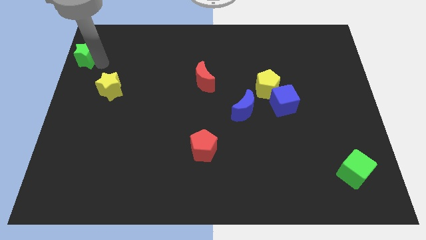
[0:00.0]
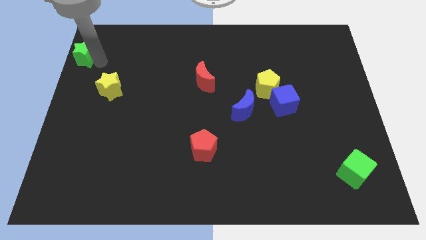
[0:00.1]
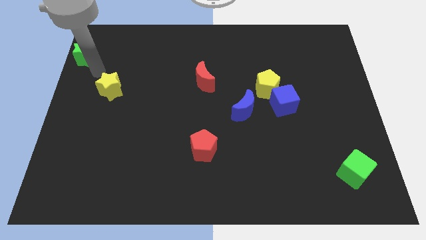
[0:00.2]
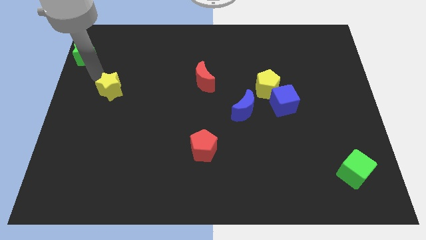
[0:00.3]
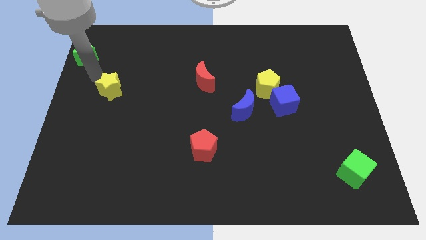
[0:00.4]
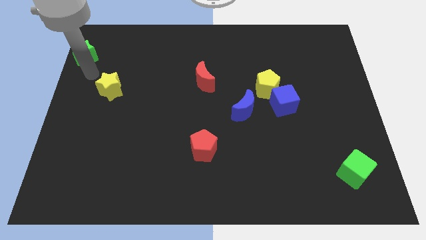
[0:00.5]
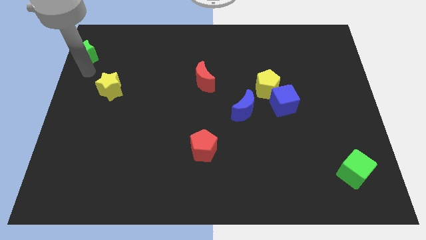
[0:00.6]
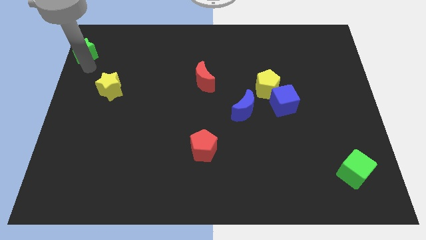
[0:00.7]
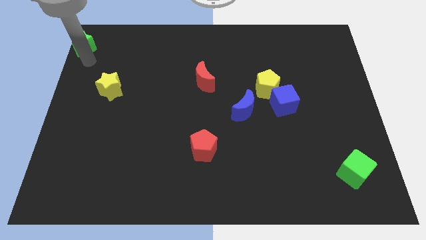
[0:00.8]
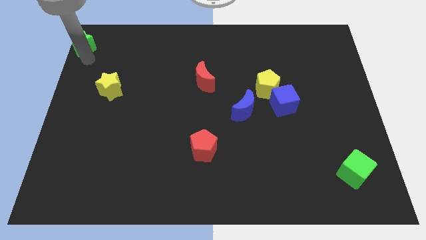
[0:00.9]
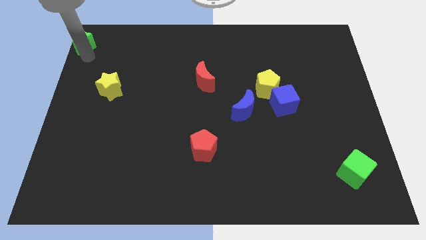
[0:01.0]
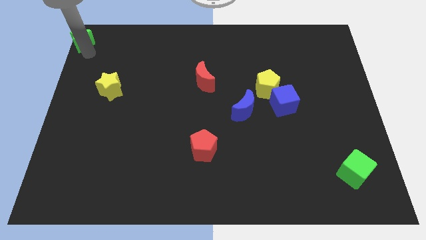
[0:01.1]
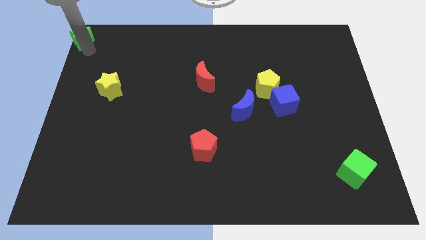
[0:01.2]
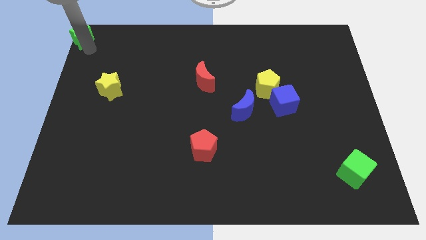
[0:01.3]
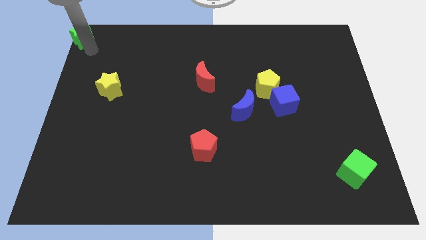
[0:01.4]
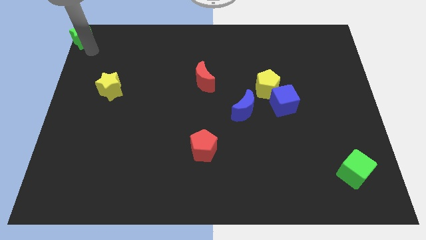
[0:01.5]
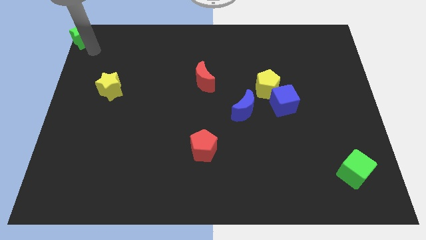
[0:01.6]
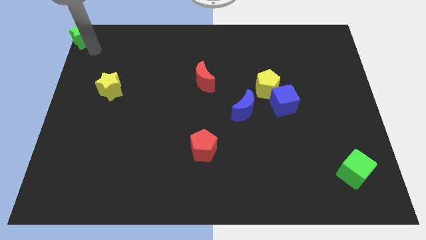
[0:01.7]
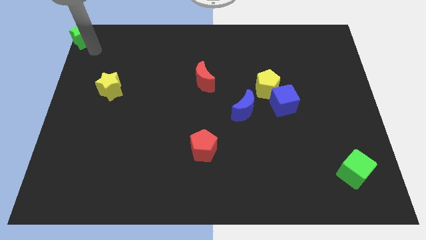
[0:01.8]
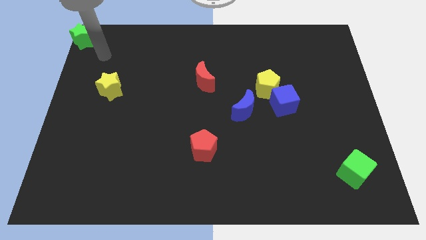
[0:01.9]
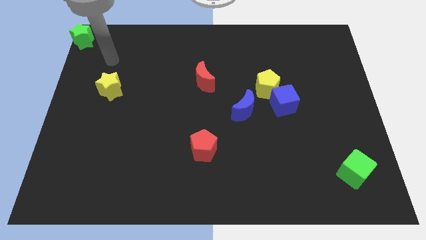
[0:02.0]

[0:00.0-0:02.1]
slide green star to the top left corner

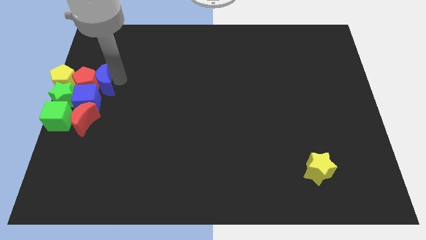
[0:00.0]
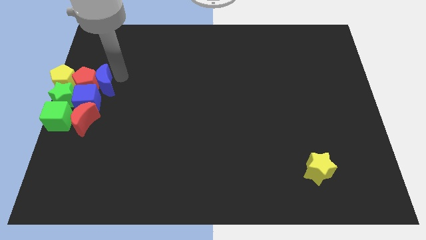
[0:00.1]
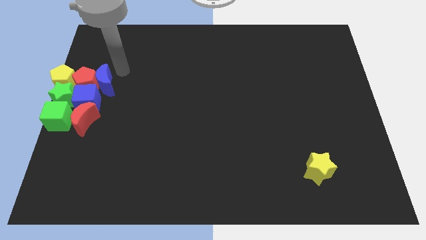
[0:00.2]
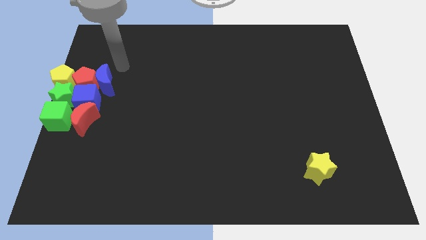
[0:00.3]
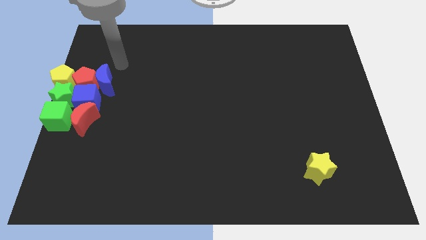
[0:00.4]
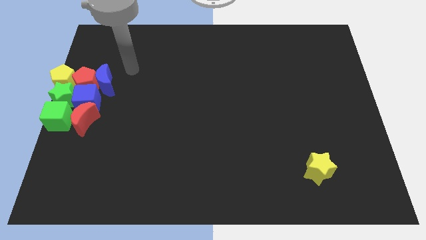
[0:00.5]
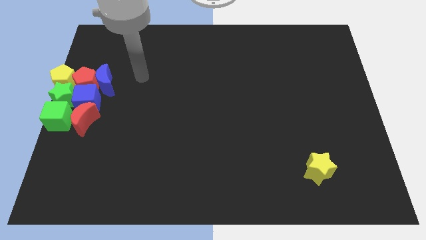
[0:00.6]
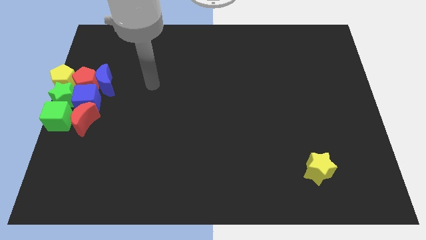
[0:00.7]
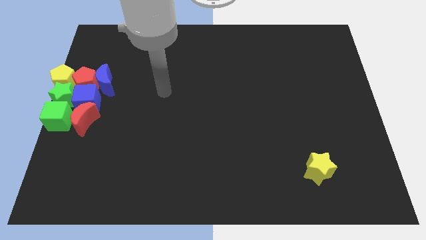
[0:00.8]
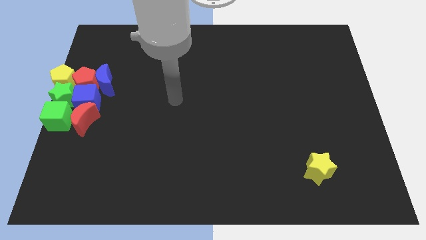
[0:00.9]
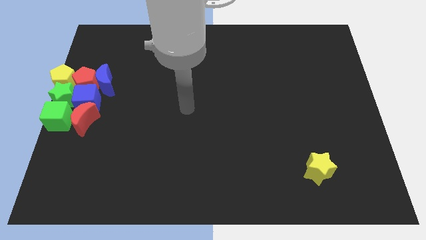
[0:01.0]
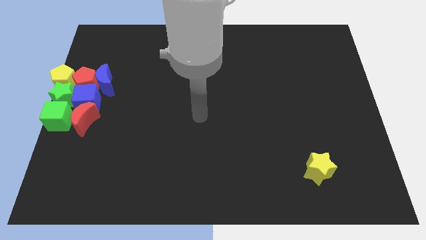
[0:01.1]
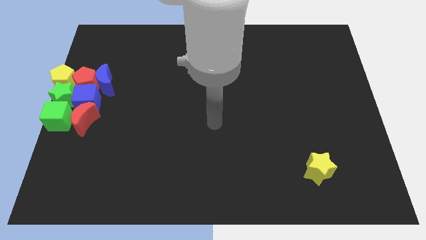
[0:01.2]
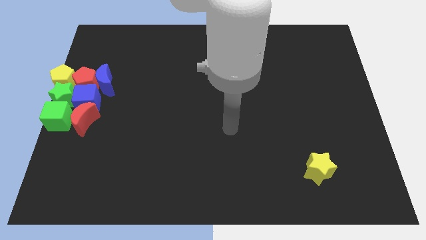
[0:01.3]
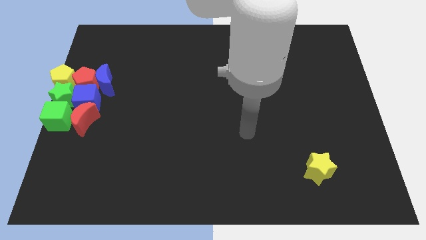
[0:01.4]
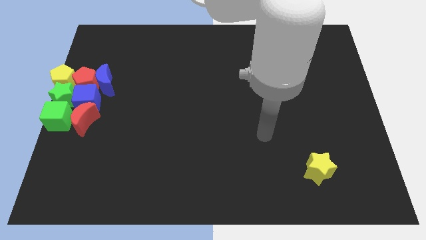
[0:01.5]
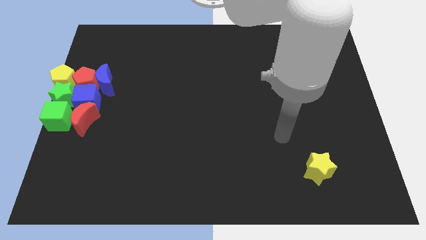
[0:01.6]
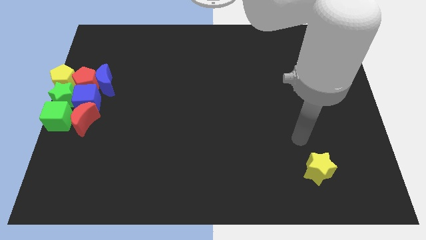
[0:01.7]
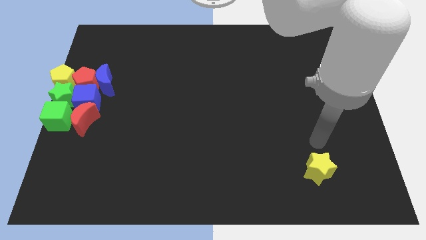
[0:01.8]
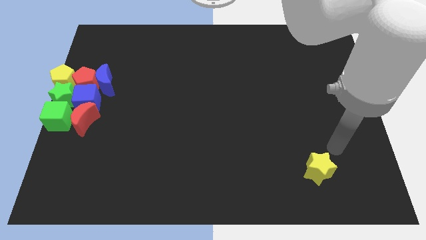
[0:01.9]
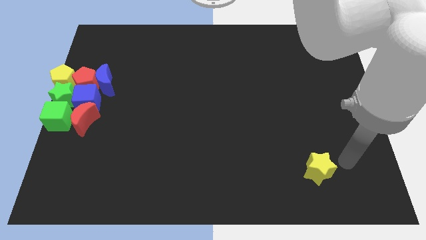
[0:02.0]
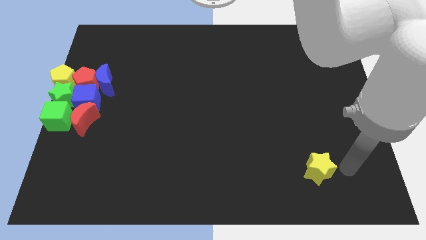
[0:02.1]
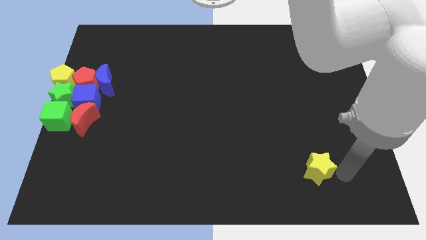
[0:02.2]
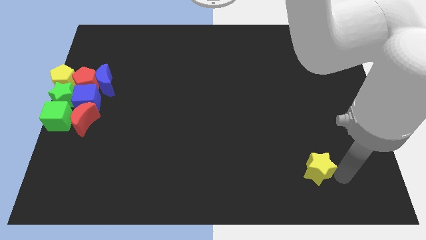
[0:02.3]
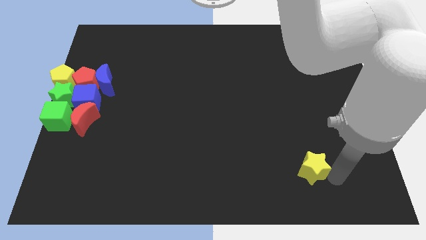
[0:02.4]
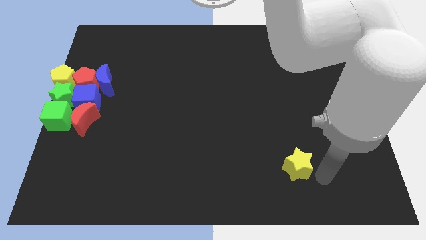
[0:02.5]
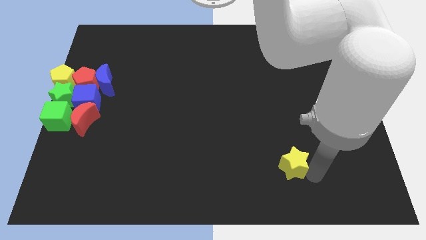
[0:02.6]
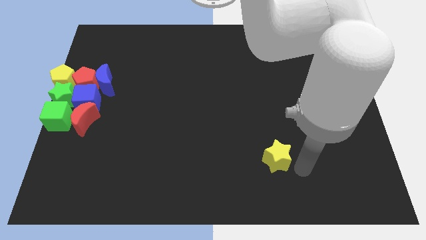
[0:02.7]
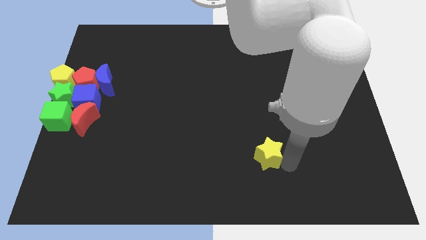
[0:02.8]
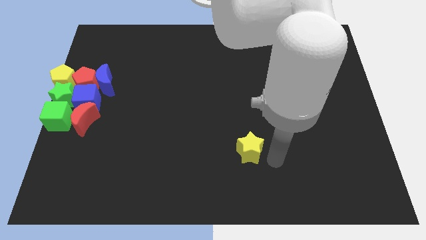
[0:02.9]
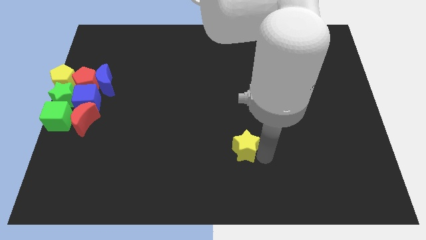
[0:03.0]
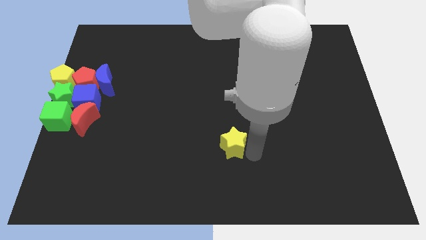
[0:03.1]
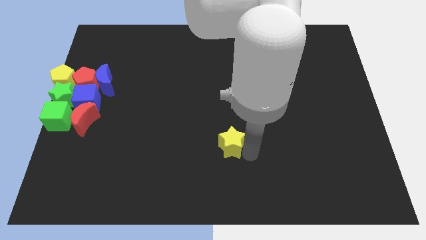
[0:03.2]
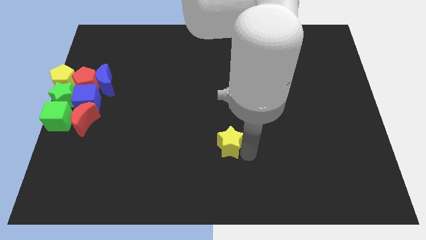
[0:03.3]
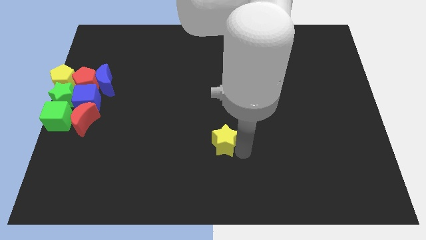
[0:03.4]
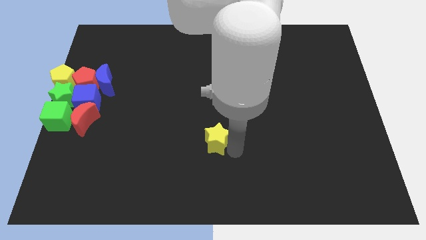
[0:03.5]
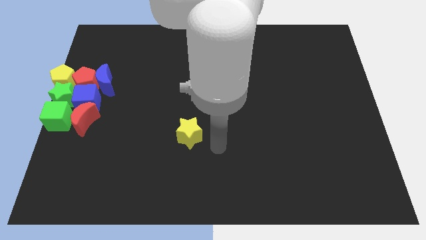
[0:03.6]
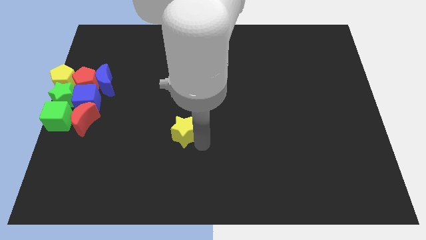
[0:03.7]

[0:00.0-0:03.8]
move the yellow star to the left side of the table

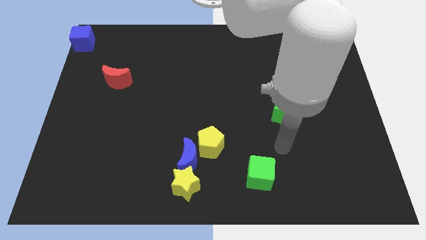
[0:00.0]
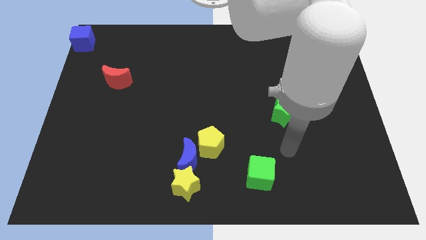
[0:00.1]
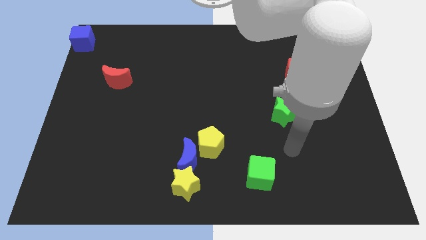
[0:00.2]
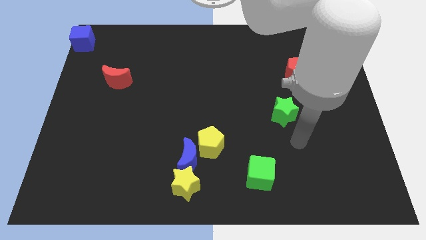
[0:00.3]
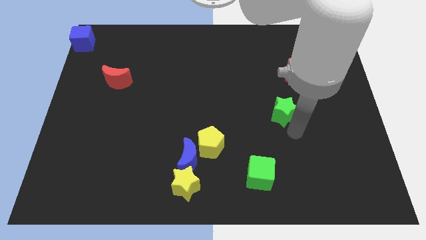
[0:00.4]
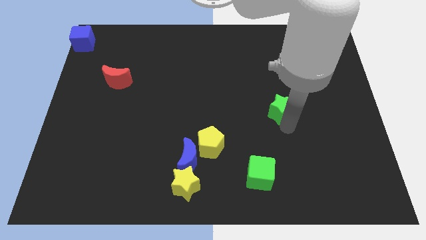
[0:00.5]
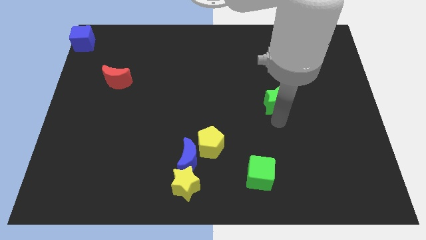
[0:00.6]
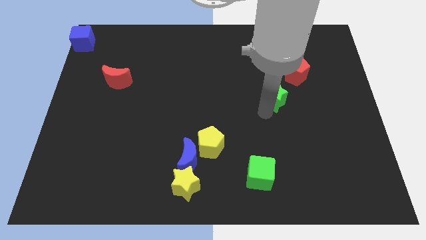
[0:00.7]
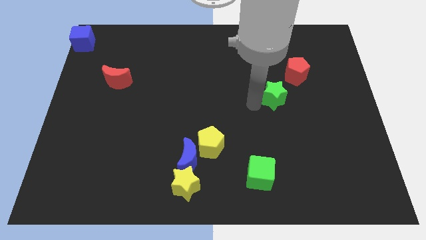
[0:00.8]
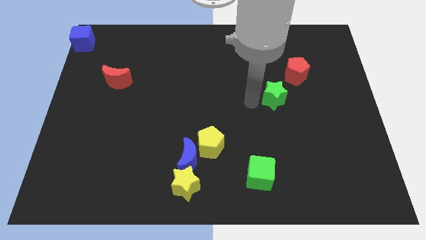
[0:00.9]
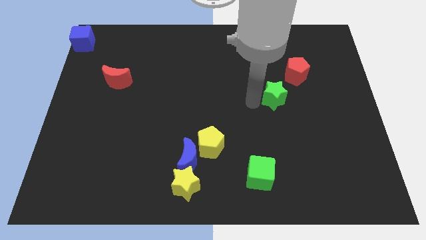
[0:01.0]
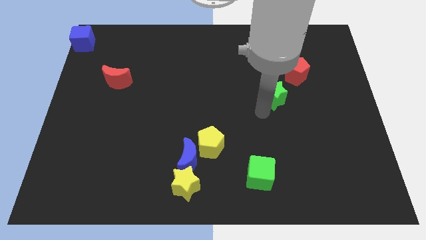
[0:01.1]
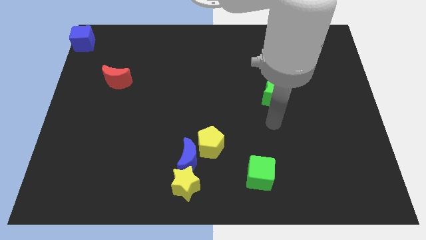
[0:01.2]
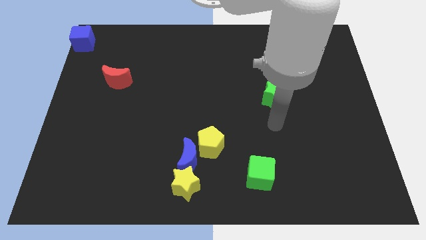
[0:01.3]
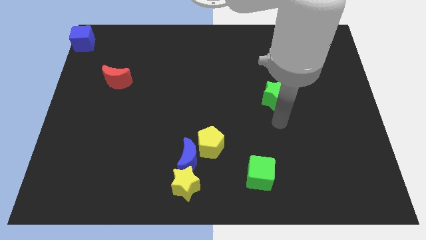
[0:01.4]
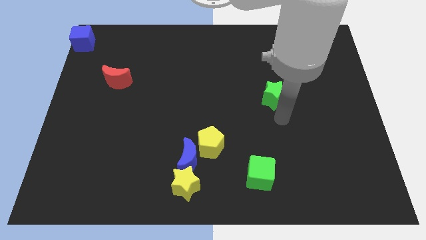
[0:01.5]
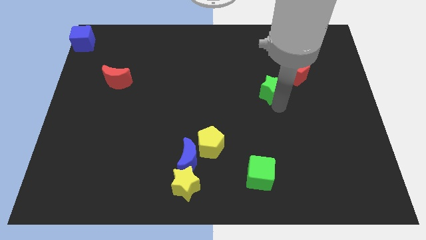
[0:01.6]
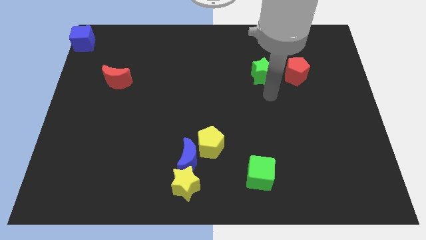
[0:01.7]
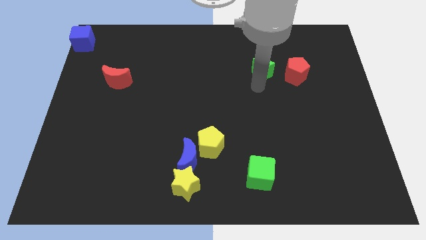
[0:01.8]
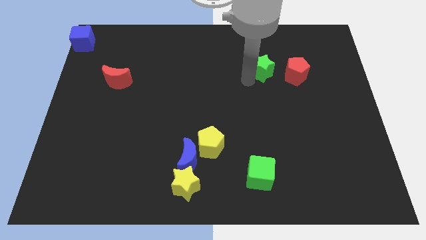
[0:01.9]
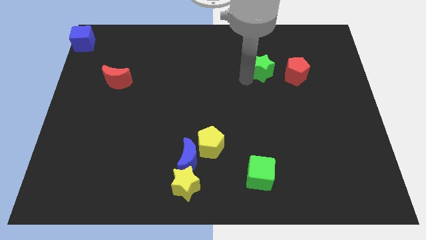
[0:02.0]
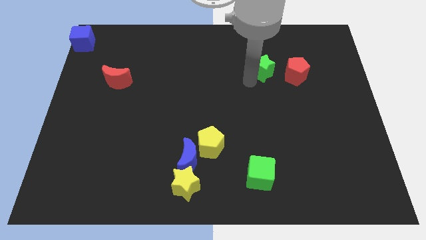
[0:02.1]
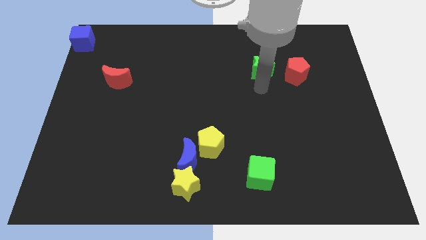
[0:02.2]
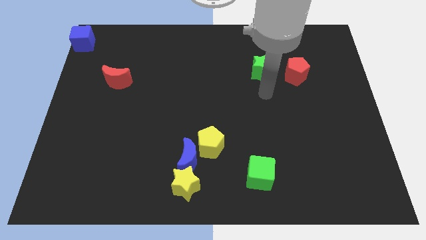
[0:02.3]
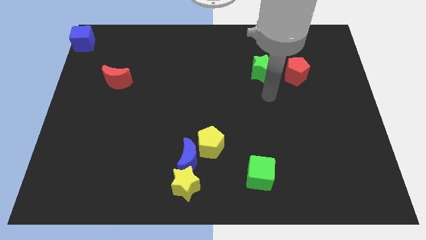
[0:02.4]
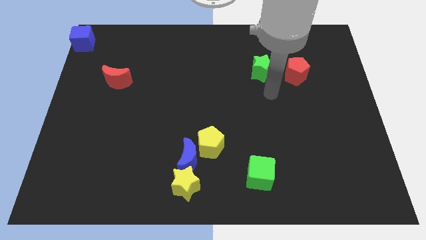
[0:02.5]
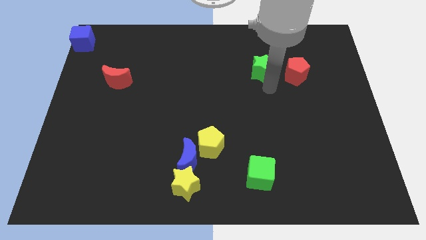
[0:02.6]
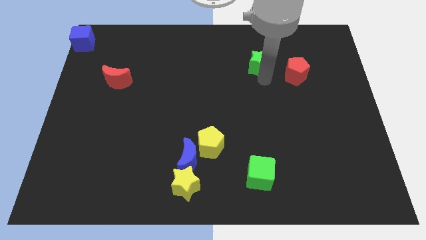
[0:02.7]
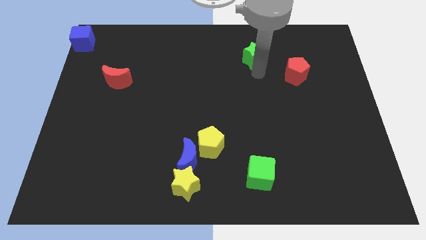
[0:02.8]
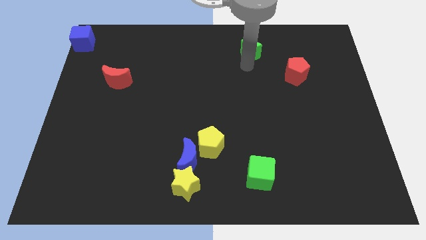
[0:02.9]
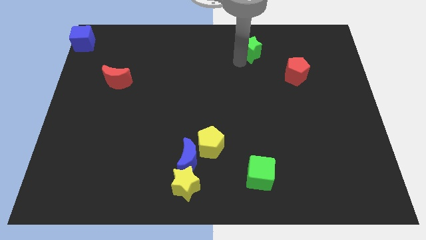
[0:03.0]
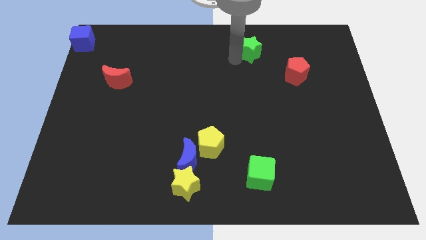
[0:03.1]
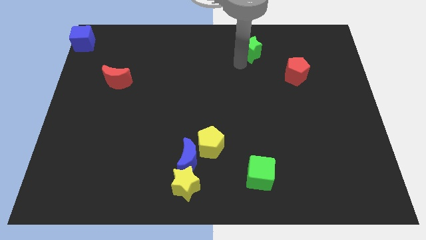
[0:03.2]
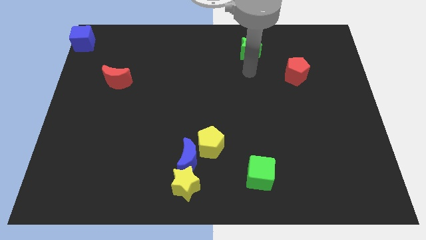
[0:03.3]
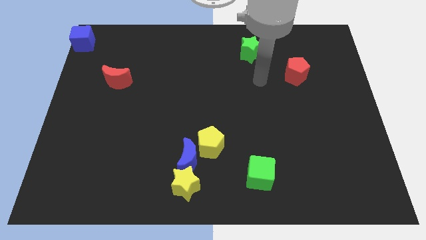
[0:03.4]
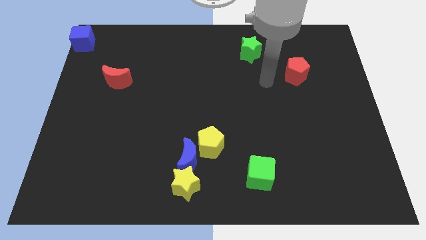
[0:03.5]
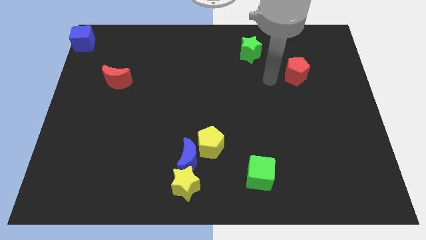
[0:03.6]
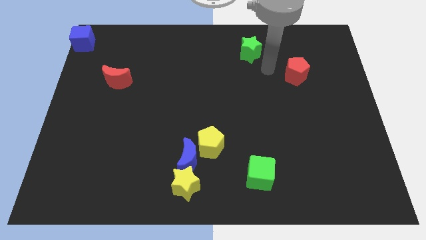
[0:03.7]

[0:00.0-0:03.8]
push the green star towards the top side
